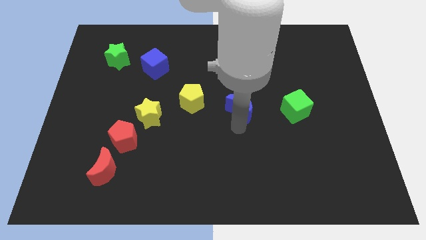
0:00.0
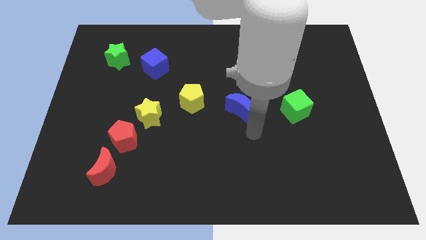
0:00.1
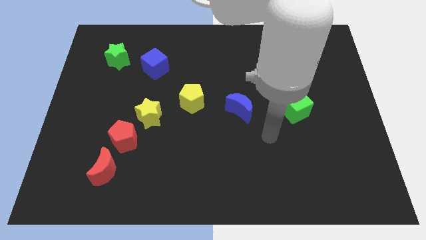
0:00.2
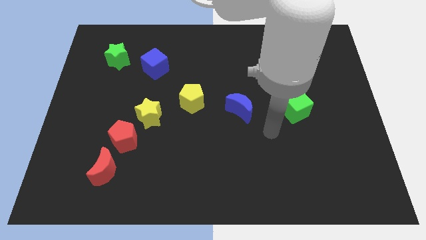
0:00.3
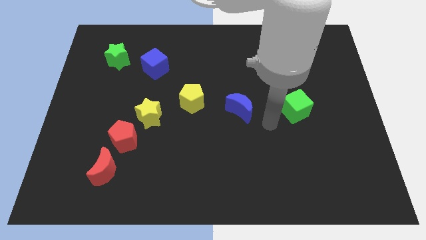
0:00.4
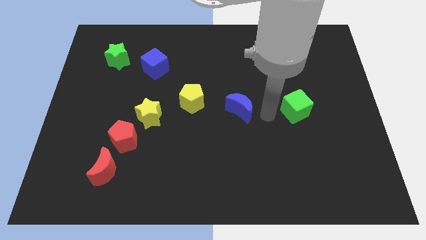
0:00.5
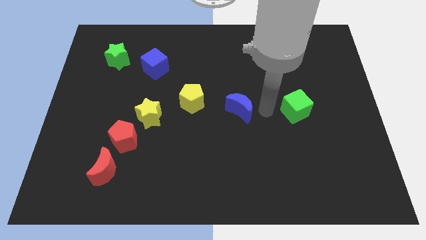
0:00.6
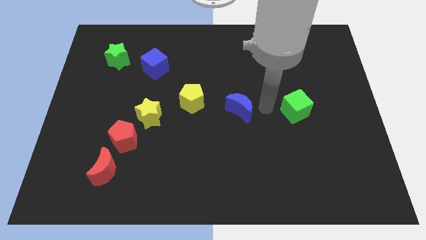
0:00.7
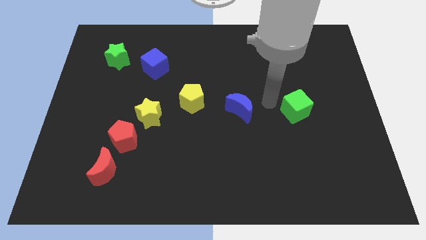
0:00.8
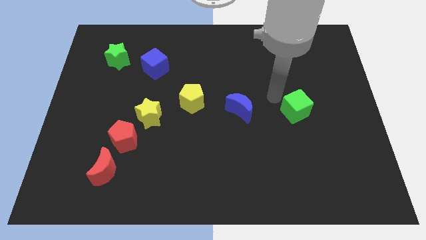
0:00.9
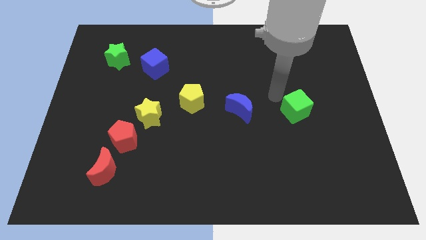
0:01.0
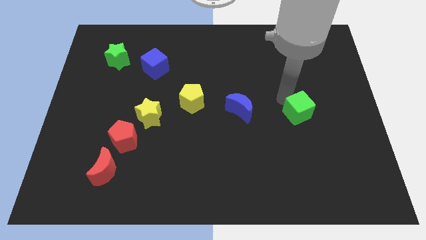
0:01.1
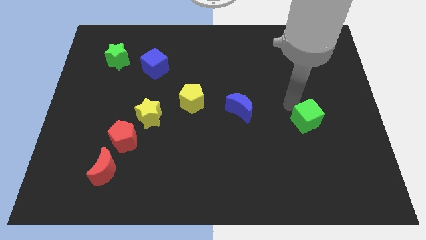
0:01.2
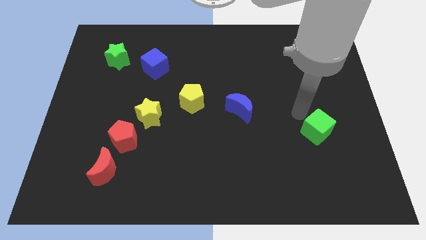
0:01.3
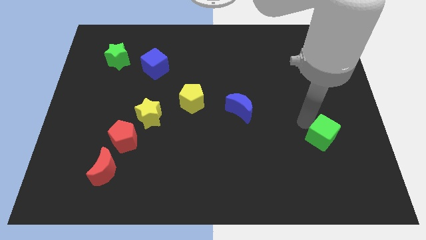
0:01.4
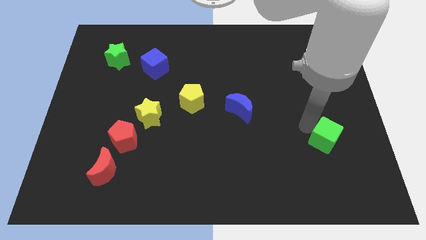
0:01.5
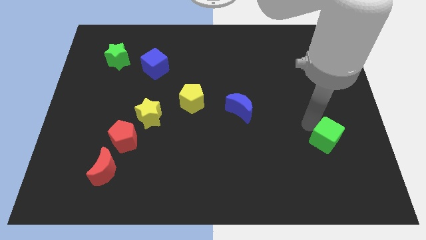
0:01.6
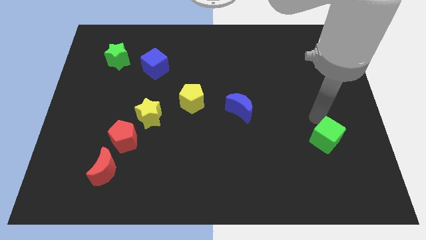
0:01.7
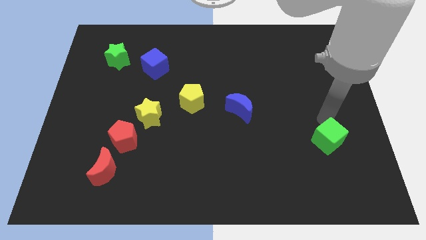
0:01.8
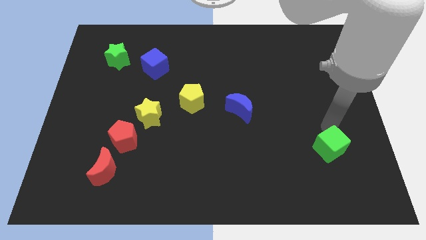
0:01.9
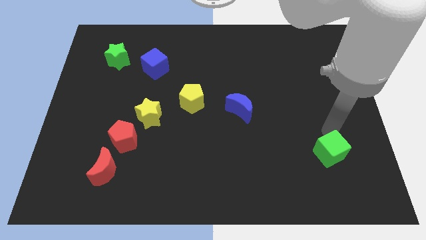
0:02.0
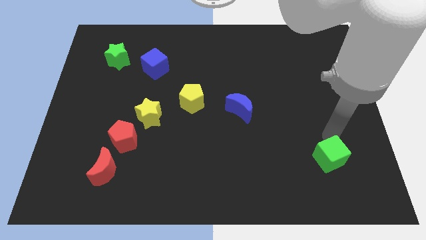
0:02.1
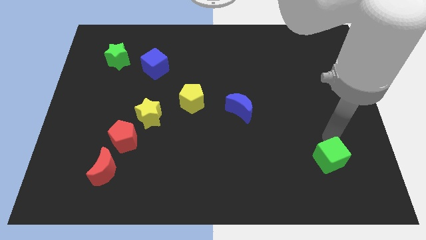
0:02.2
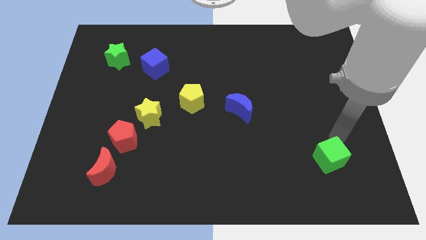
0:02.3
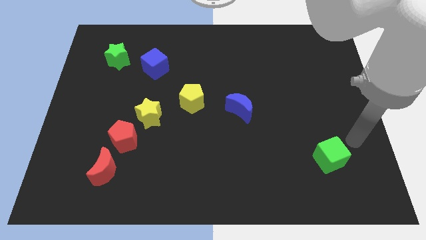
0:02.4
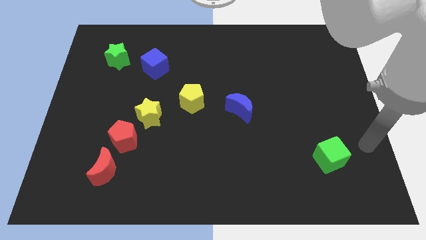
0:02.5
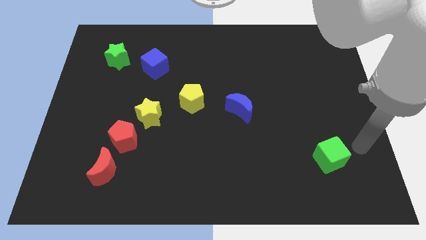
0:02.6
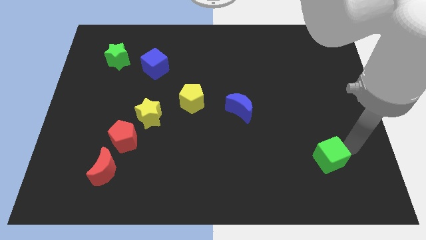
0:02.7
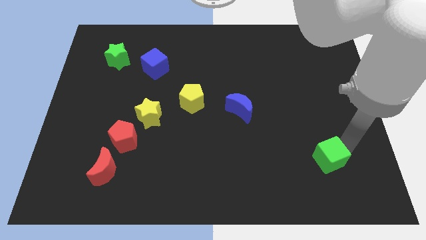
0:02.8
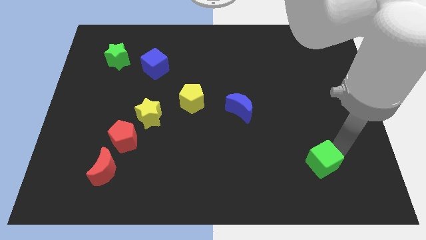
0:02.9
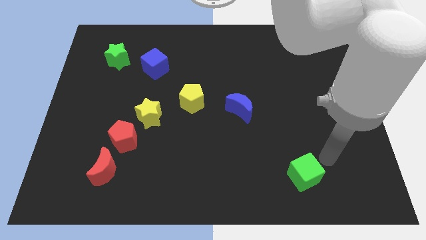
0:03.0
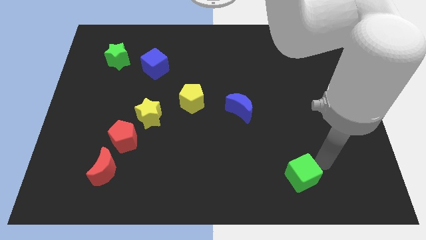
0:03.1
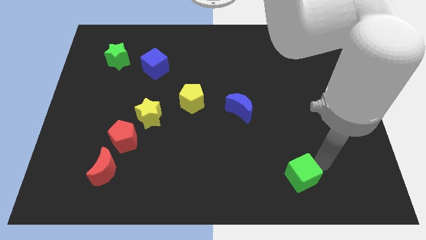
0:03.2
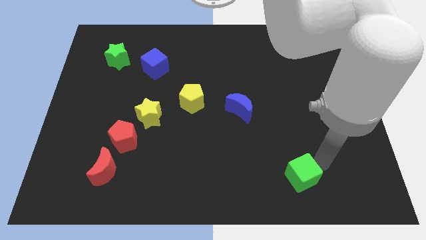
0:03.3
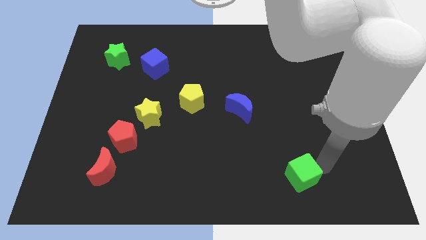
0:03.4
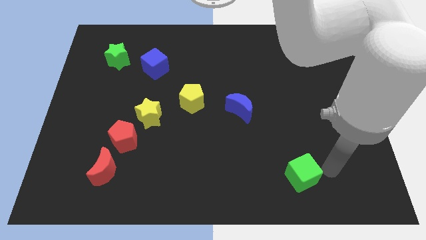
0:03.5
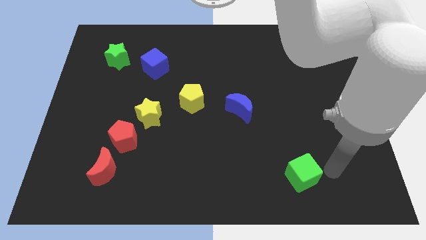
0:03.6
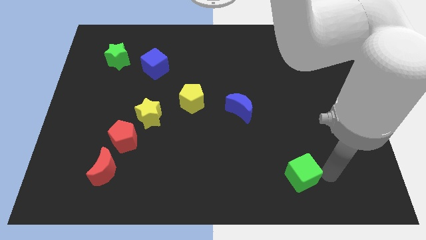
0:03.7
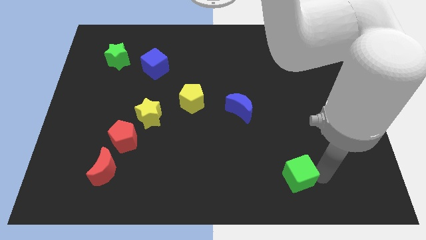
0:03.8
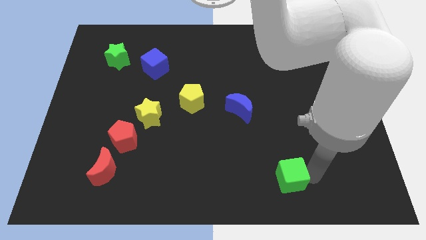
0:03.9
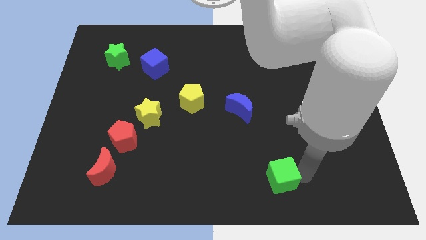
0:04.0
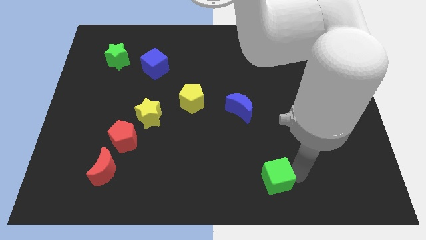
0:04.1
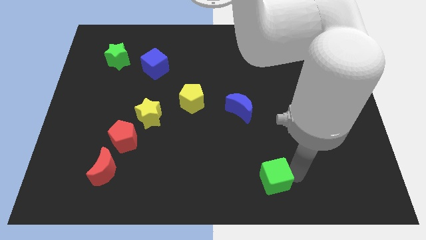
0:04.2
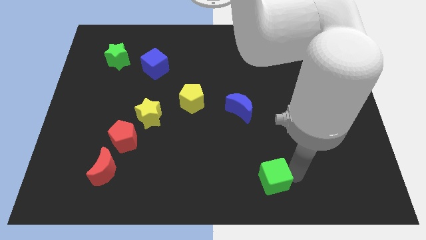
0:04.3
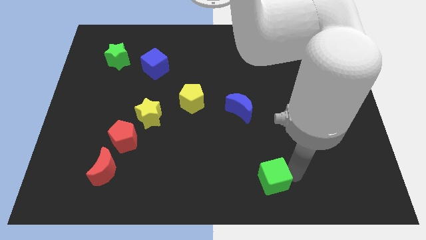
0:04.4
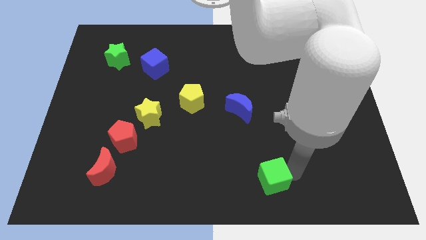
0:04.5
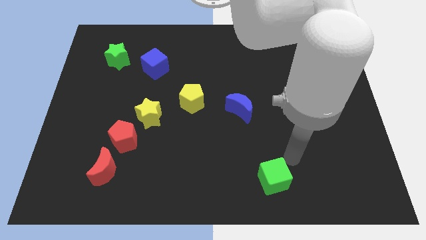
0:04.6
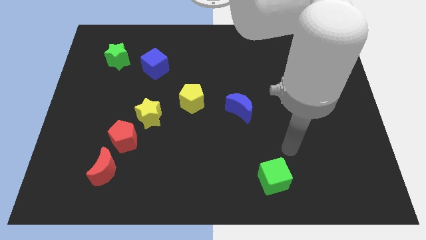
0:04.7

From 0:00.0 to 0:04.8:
move the green cube to the bottom center

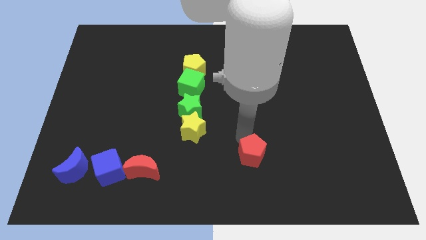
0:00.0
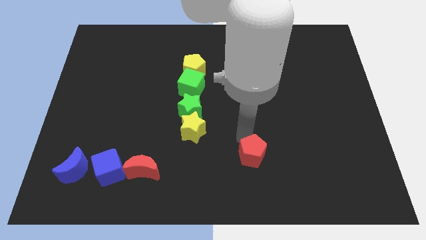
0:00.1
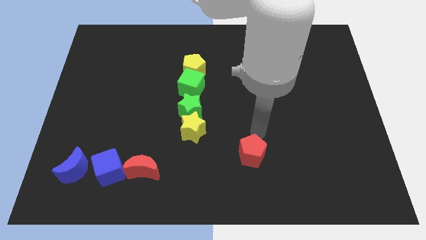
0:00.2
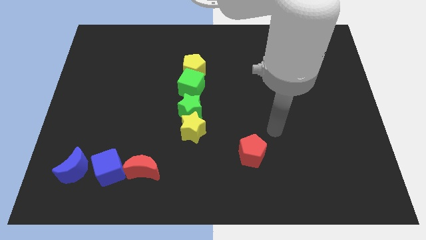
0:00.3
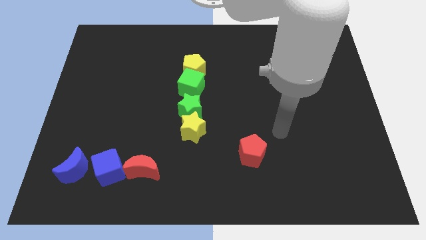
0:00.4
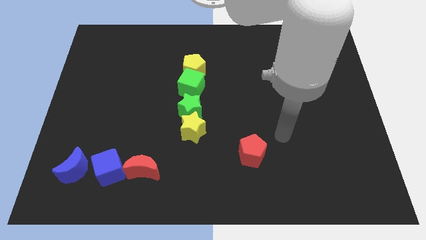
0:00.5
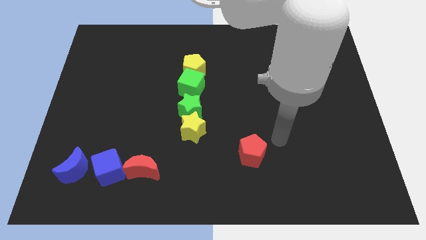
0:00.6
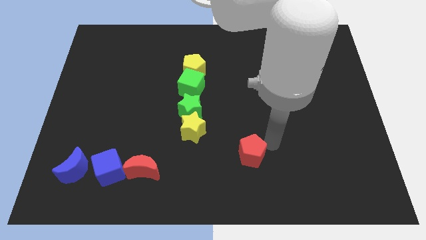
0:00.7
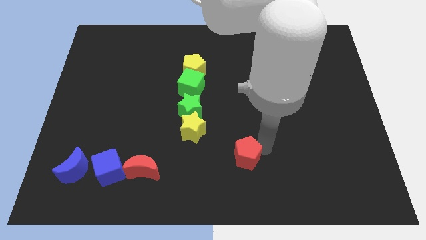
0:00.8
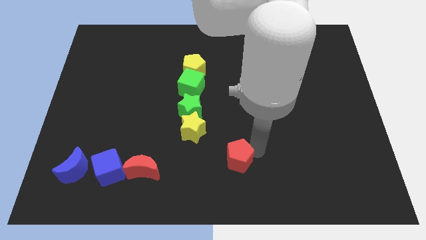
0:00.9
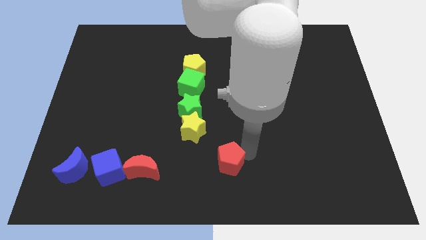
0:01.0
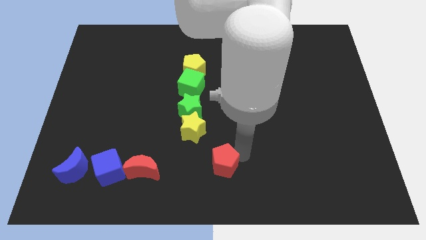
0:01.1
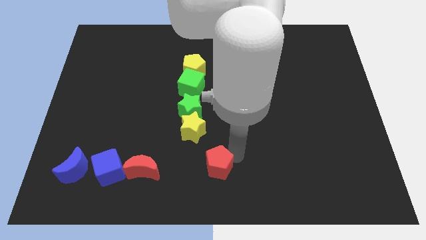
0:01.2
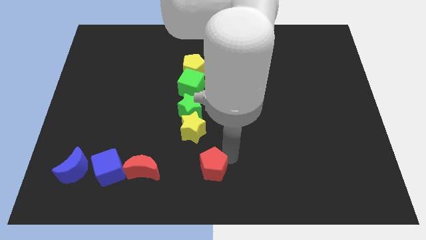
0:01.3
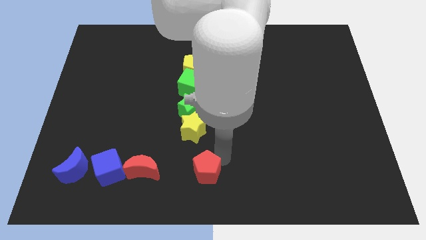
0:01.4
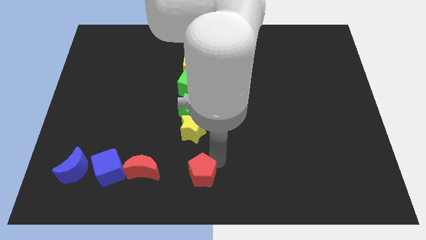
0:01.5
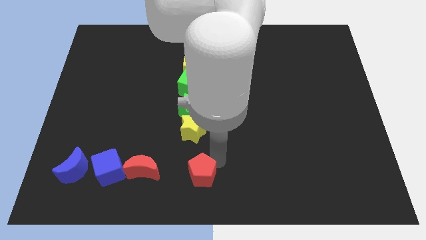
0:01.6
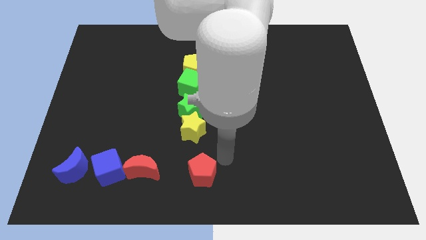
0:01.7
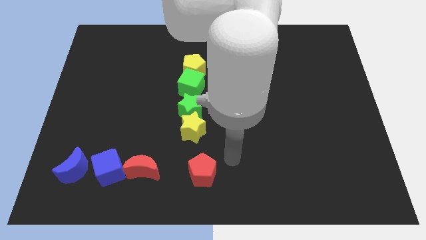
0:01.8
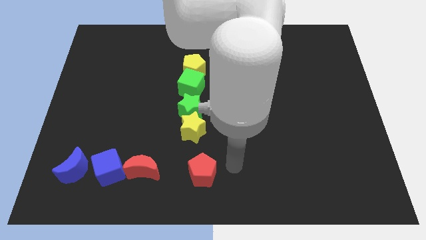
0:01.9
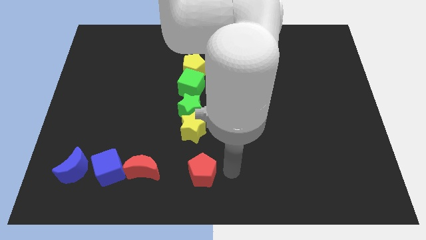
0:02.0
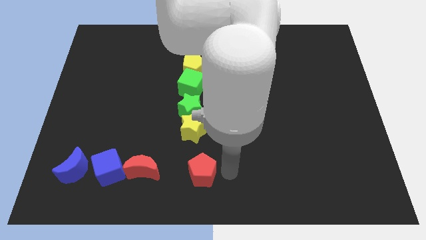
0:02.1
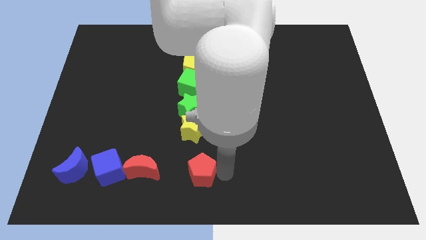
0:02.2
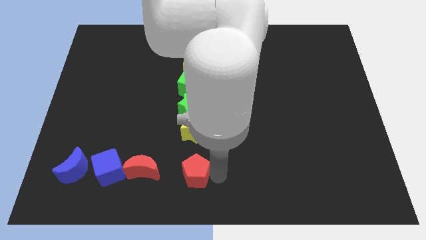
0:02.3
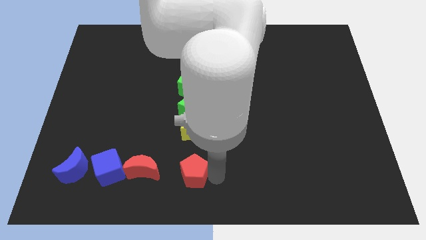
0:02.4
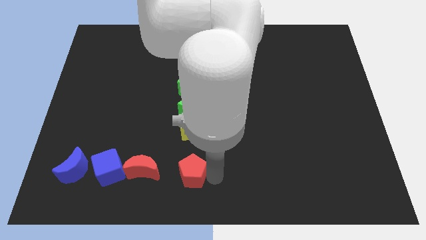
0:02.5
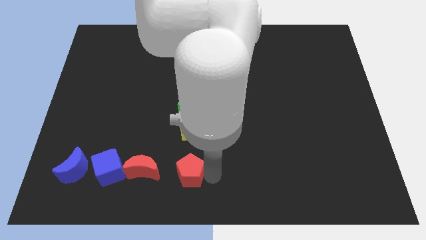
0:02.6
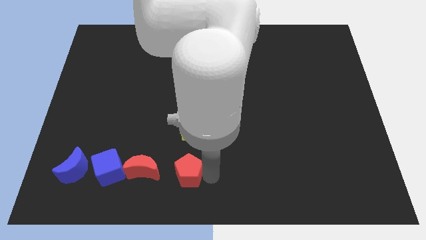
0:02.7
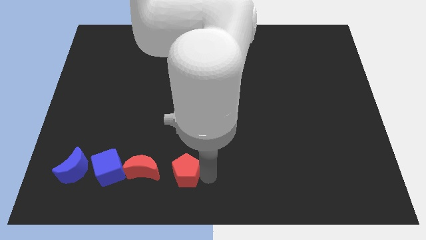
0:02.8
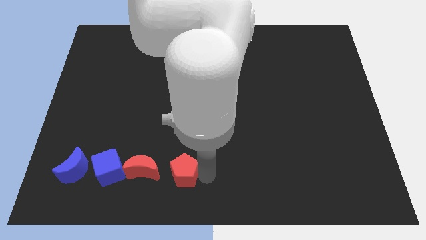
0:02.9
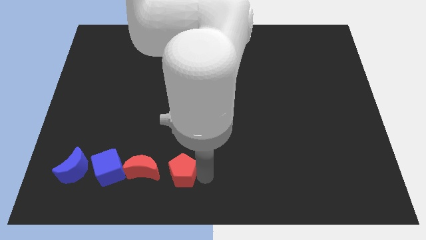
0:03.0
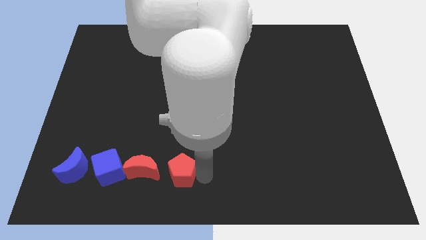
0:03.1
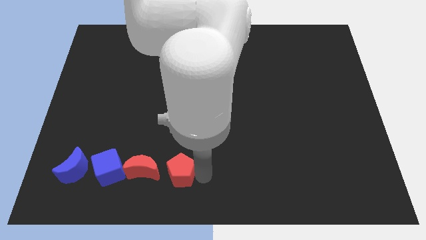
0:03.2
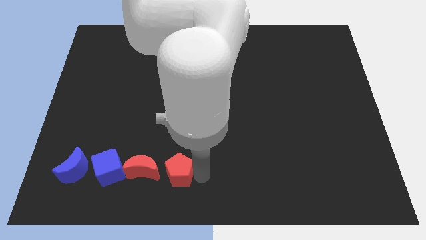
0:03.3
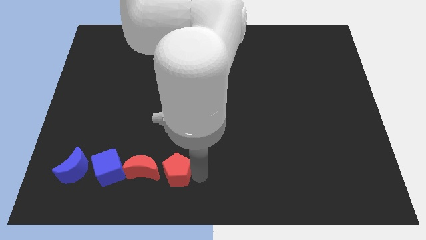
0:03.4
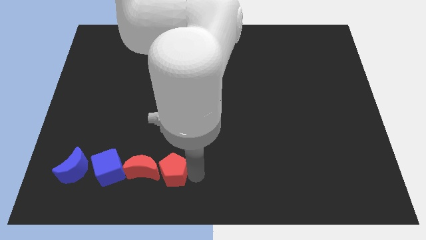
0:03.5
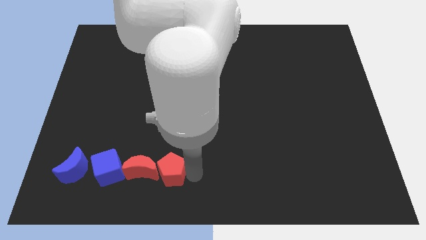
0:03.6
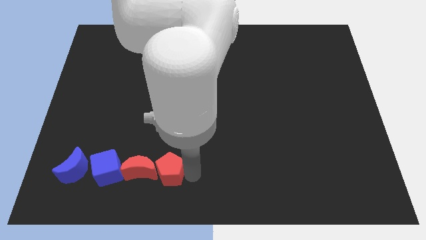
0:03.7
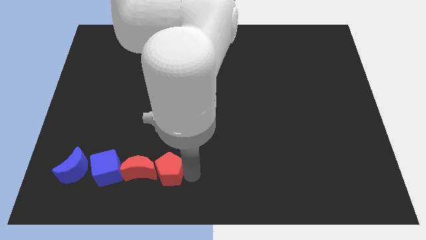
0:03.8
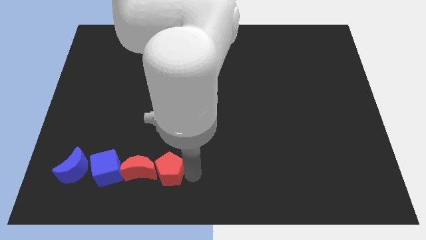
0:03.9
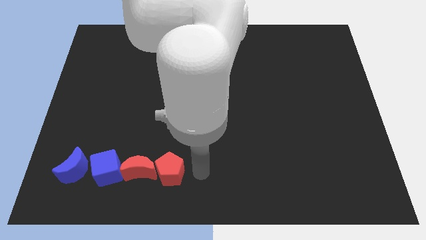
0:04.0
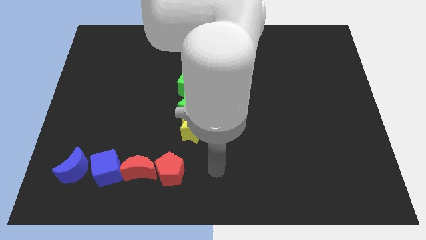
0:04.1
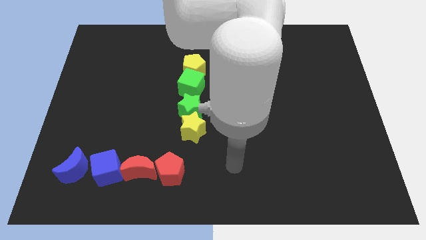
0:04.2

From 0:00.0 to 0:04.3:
move the red pentagon to the right side of the red moon
